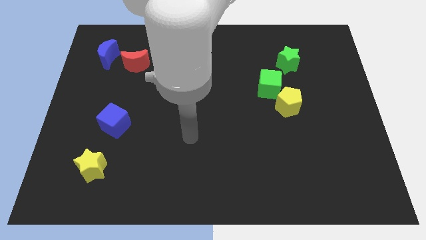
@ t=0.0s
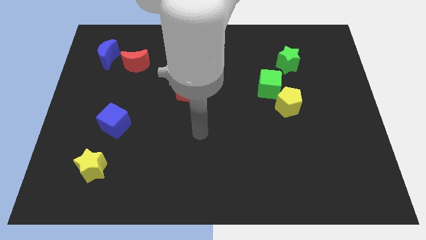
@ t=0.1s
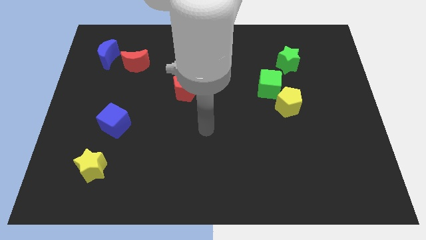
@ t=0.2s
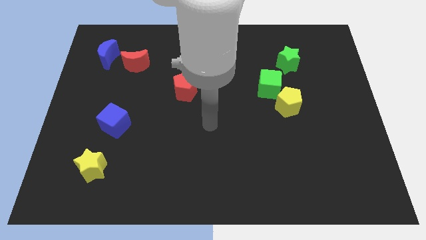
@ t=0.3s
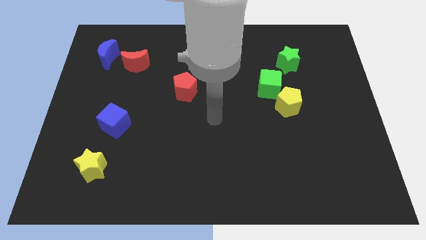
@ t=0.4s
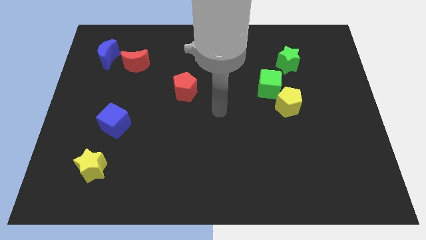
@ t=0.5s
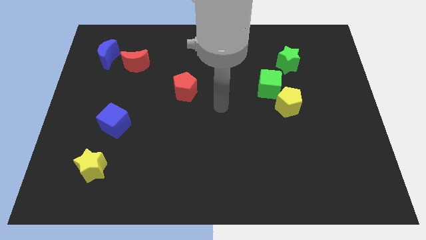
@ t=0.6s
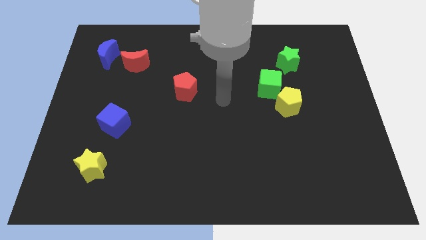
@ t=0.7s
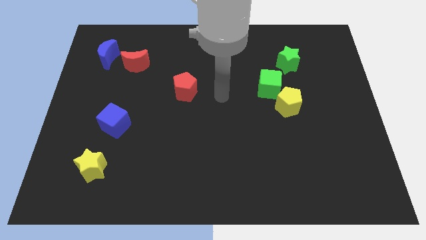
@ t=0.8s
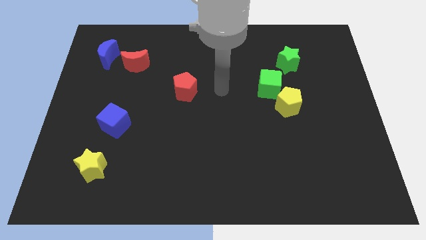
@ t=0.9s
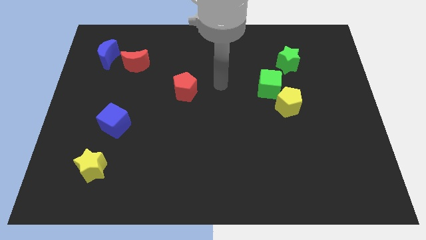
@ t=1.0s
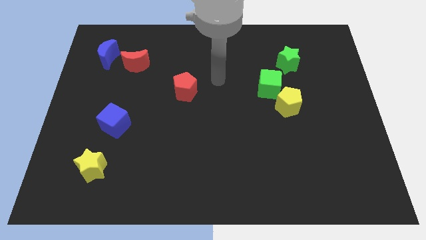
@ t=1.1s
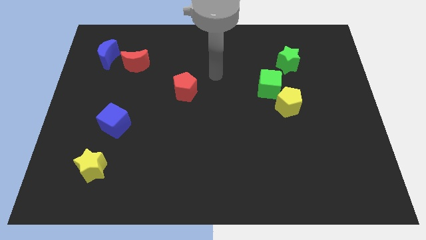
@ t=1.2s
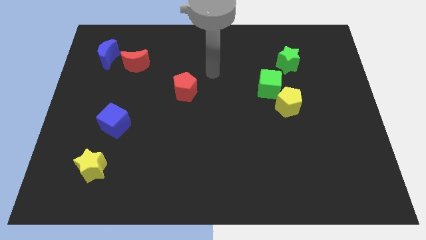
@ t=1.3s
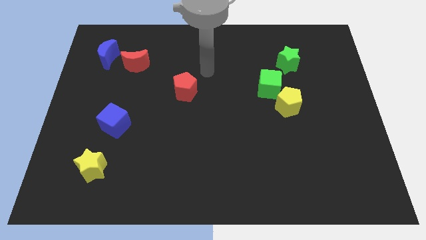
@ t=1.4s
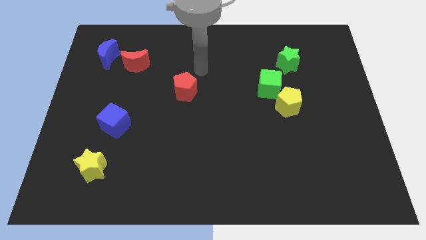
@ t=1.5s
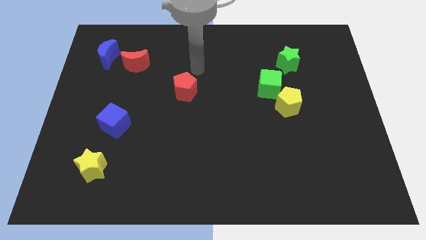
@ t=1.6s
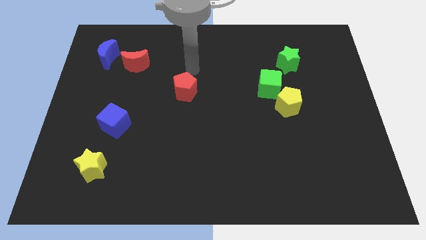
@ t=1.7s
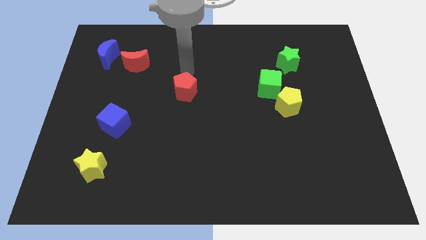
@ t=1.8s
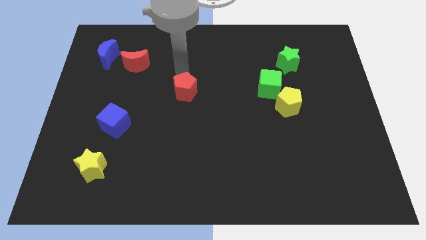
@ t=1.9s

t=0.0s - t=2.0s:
place your arm at the top of the red pentagon

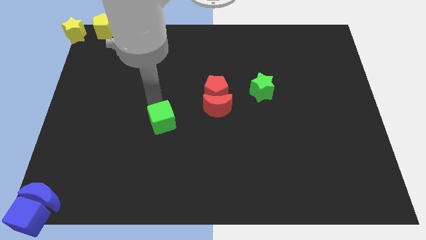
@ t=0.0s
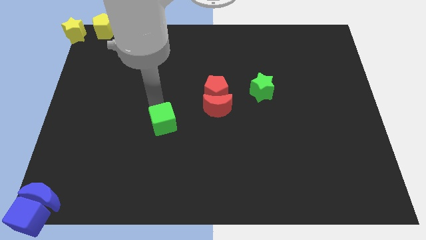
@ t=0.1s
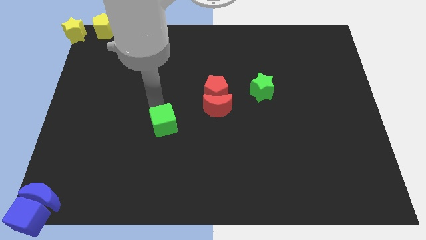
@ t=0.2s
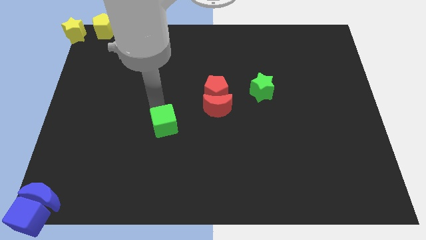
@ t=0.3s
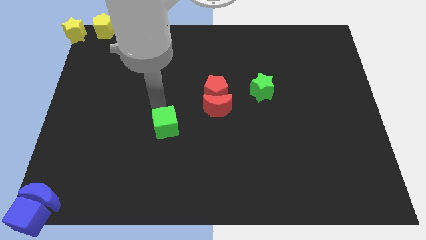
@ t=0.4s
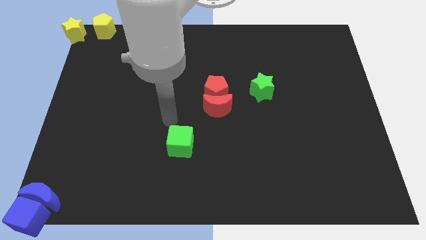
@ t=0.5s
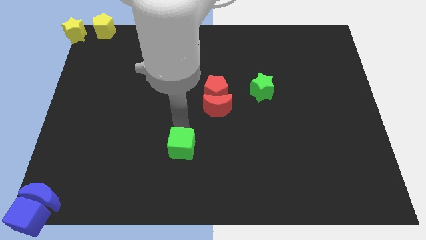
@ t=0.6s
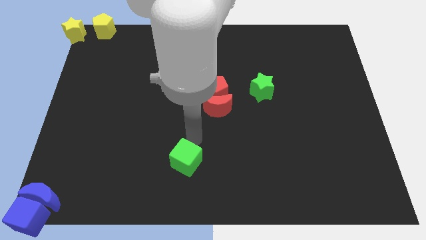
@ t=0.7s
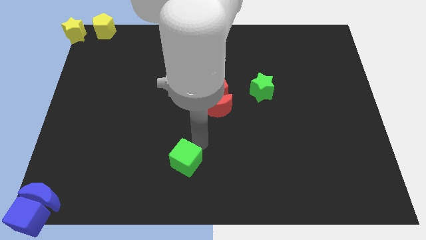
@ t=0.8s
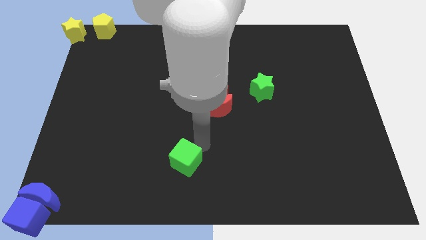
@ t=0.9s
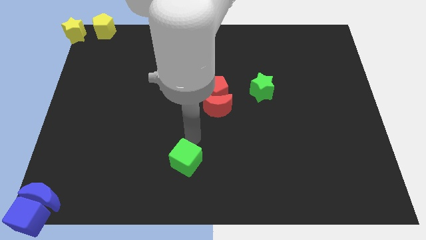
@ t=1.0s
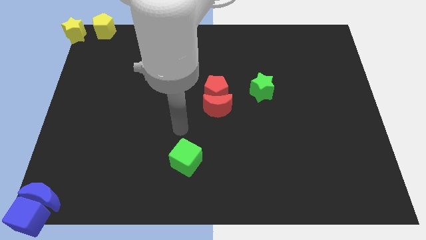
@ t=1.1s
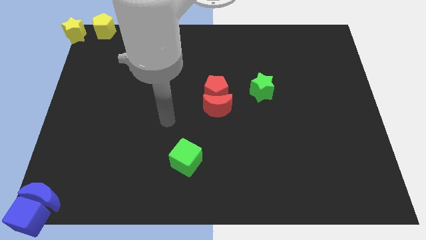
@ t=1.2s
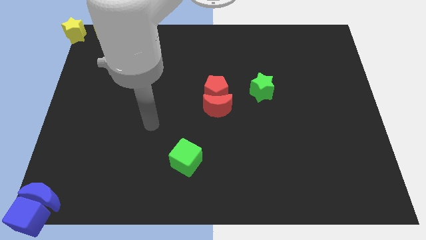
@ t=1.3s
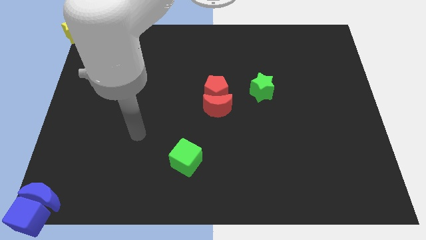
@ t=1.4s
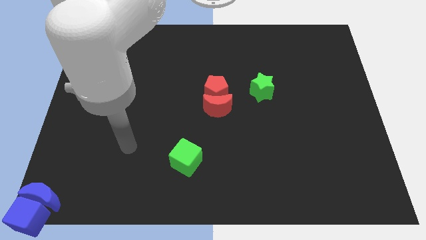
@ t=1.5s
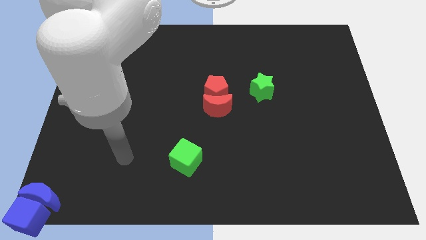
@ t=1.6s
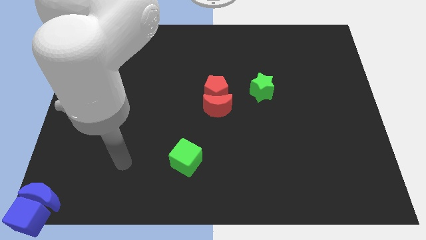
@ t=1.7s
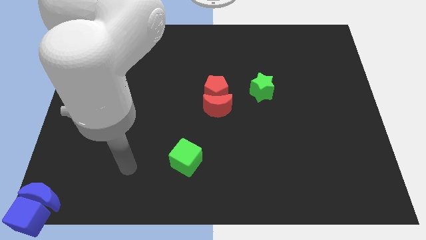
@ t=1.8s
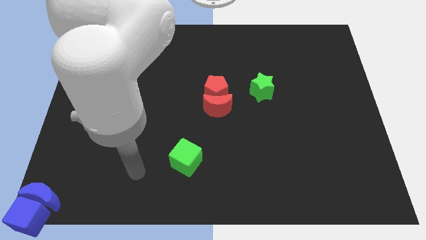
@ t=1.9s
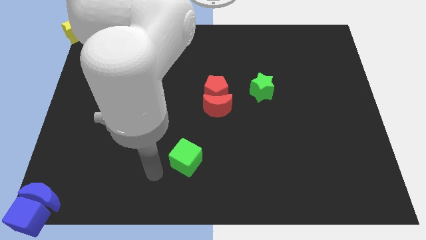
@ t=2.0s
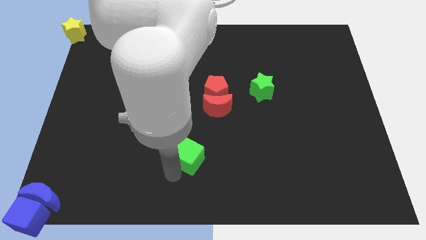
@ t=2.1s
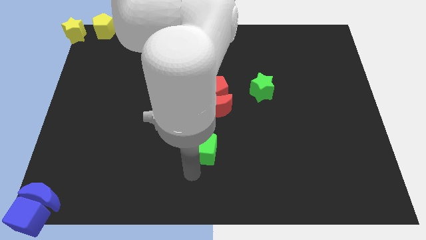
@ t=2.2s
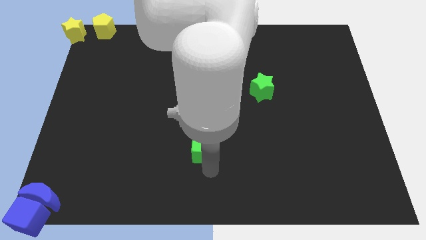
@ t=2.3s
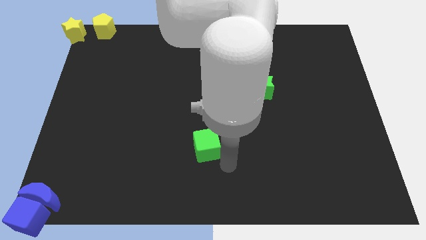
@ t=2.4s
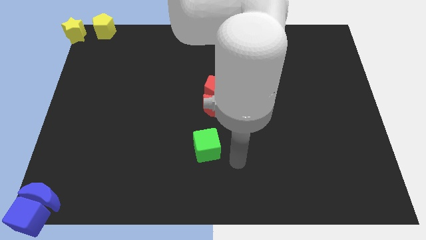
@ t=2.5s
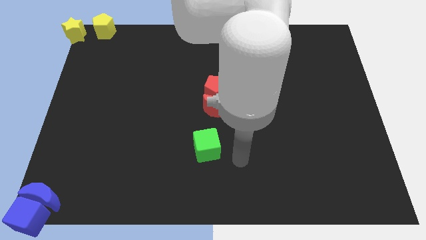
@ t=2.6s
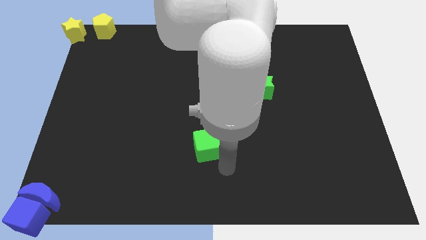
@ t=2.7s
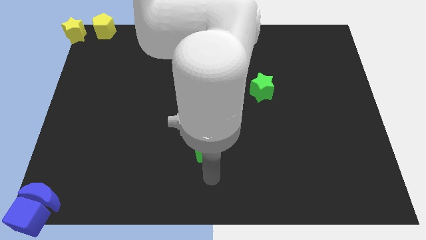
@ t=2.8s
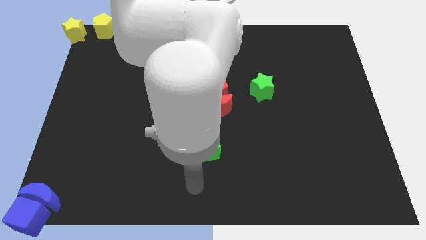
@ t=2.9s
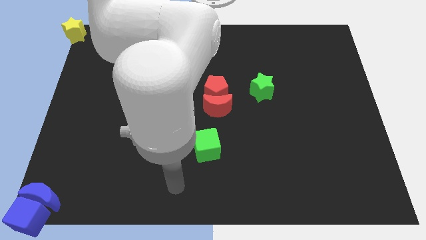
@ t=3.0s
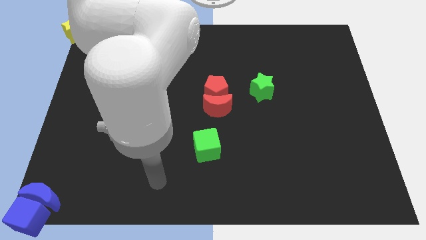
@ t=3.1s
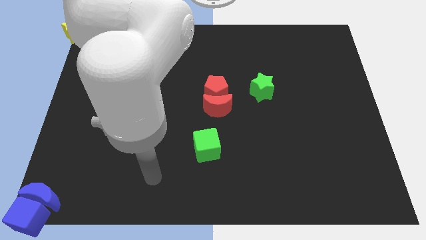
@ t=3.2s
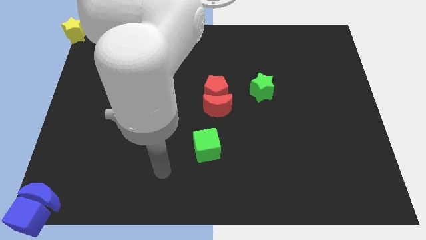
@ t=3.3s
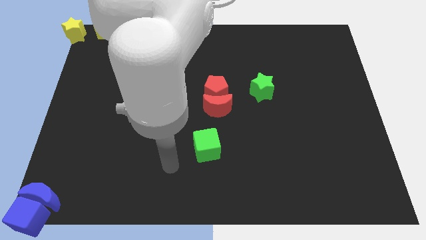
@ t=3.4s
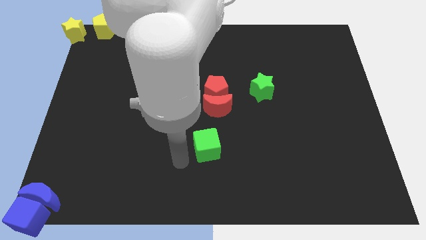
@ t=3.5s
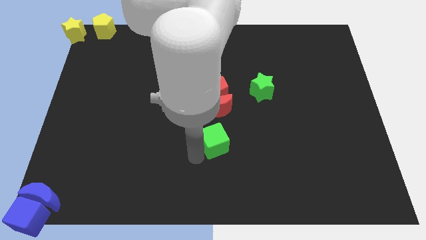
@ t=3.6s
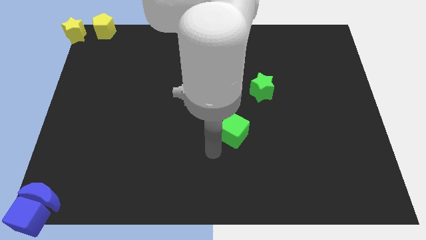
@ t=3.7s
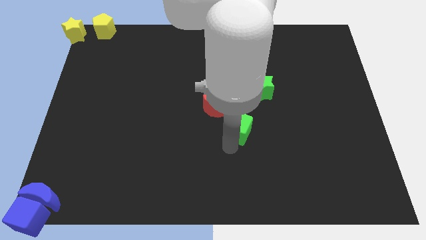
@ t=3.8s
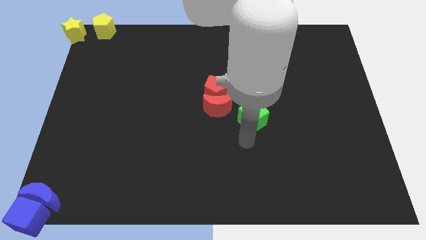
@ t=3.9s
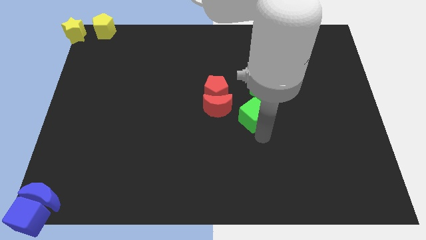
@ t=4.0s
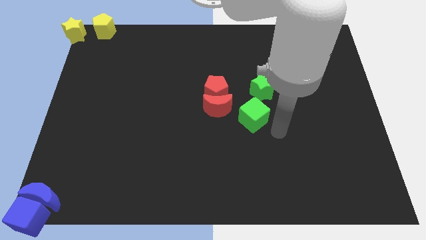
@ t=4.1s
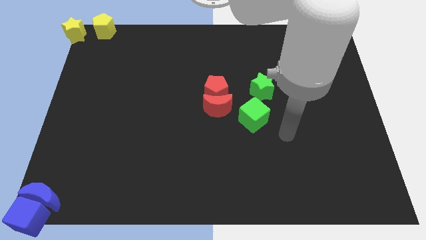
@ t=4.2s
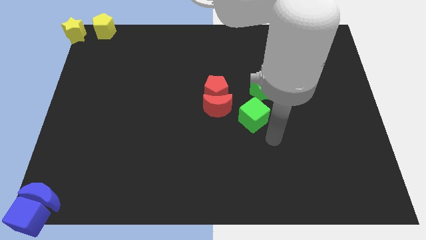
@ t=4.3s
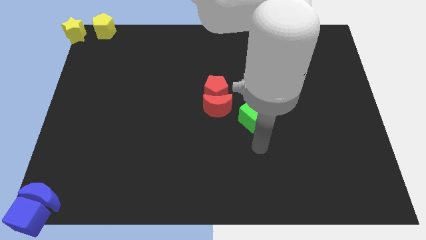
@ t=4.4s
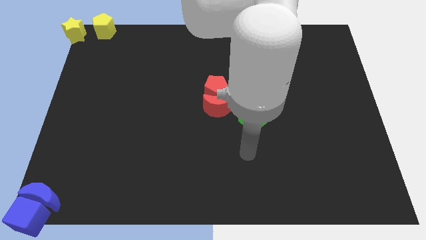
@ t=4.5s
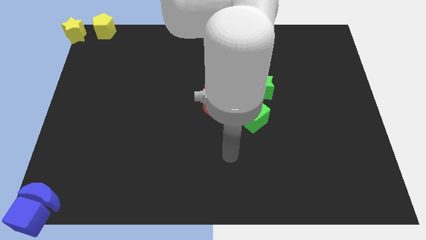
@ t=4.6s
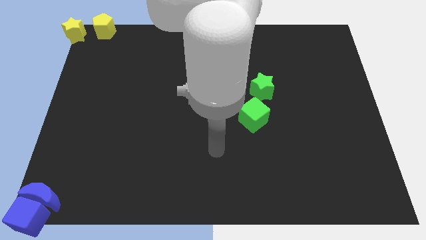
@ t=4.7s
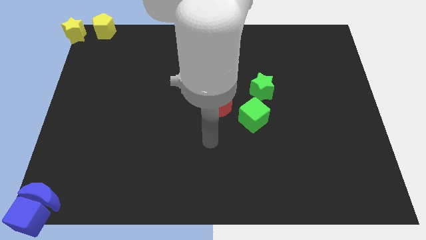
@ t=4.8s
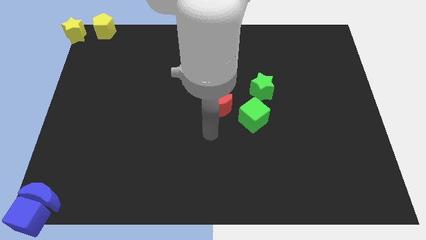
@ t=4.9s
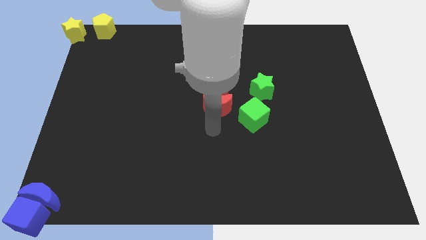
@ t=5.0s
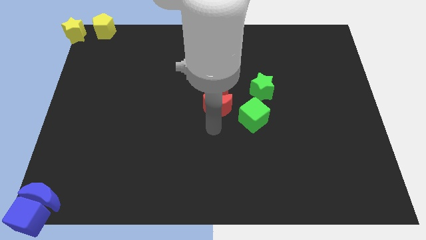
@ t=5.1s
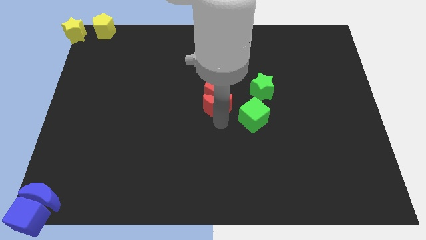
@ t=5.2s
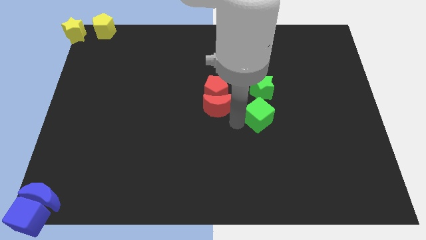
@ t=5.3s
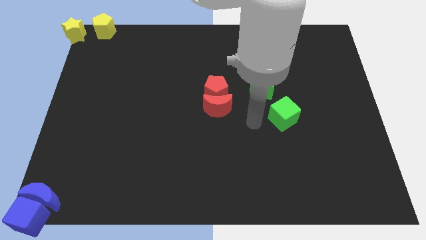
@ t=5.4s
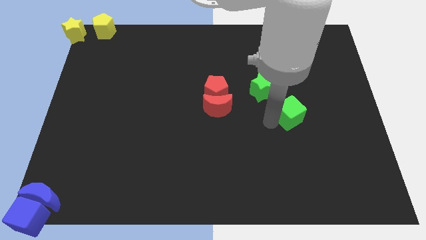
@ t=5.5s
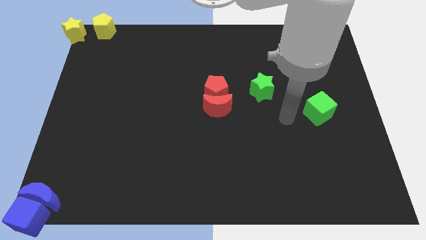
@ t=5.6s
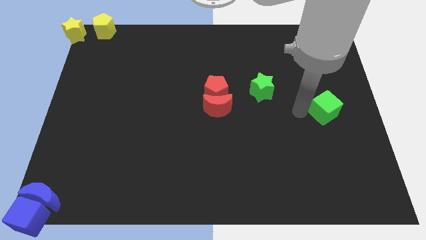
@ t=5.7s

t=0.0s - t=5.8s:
move the green cube towards the right side

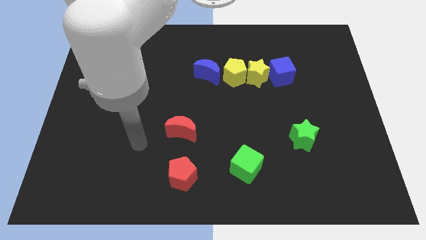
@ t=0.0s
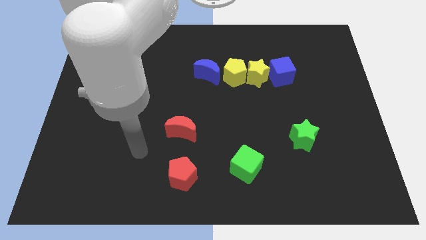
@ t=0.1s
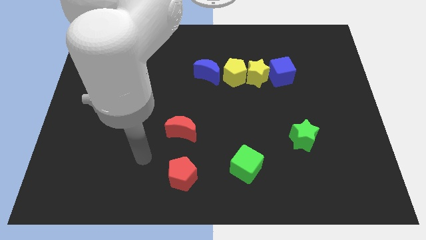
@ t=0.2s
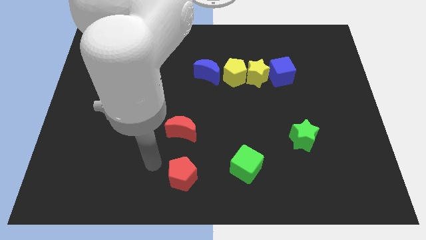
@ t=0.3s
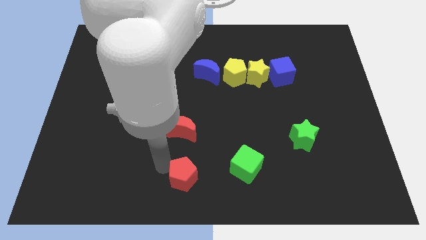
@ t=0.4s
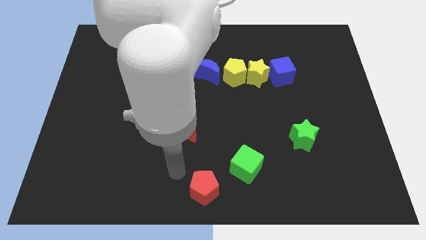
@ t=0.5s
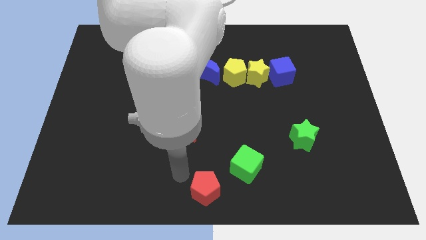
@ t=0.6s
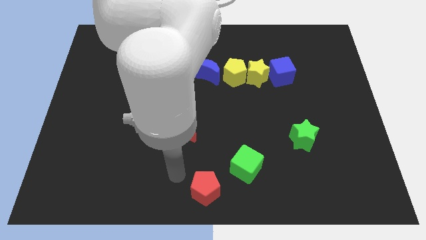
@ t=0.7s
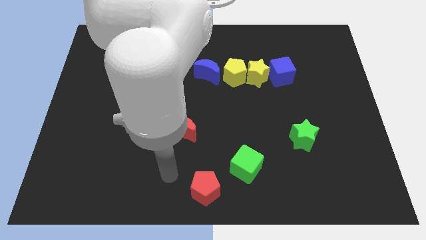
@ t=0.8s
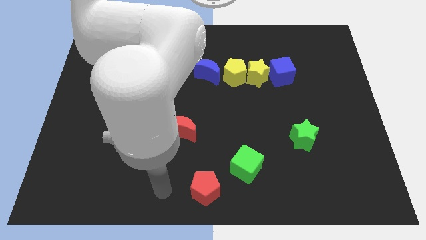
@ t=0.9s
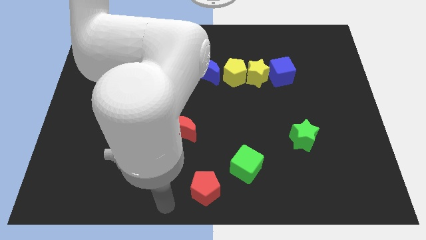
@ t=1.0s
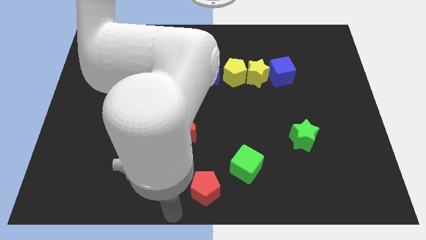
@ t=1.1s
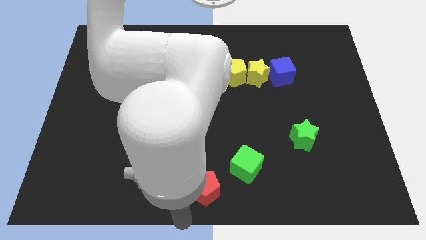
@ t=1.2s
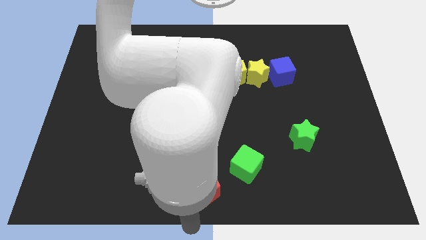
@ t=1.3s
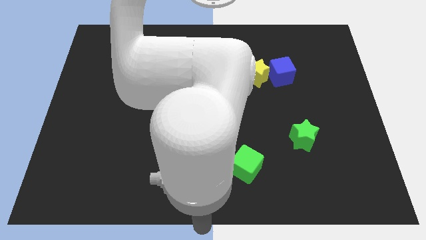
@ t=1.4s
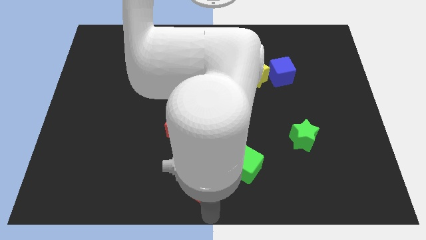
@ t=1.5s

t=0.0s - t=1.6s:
touch the red pentagon with your arm
